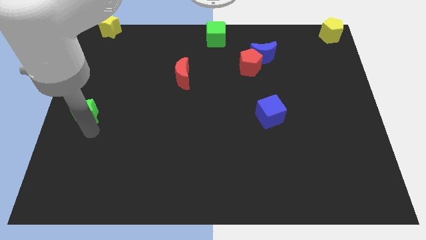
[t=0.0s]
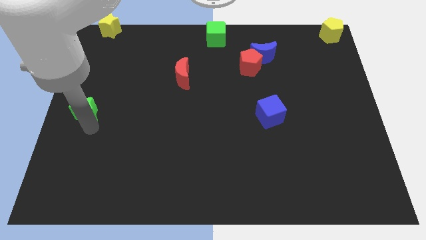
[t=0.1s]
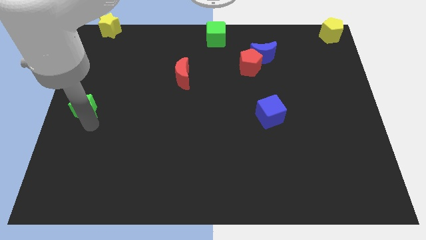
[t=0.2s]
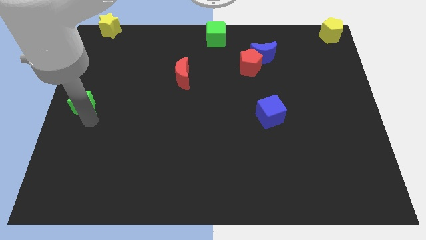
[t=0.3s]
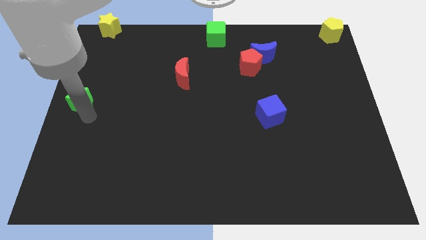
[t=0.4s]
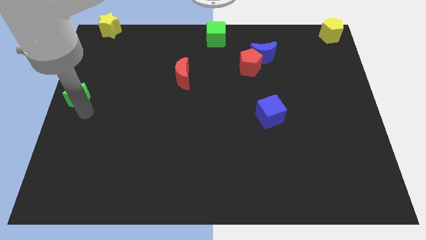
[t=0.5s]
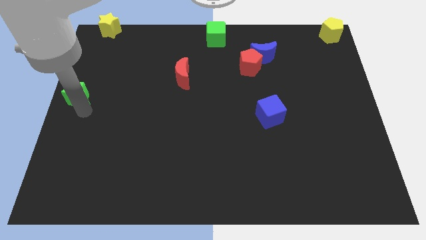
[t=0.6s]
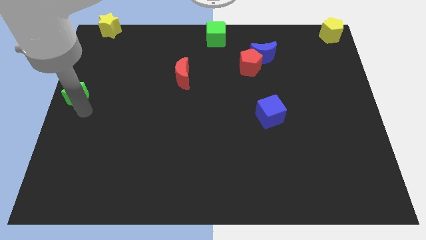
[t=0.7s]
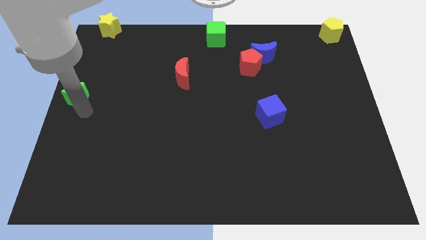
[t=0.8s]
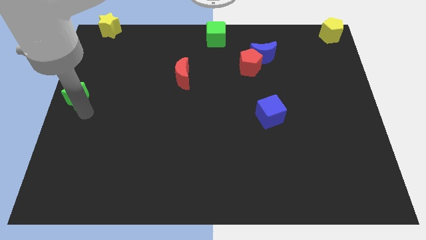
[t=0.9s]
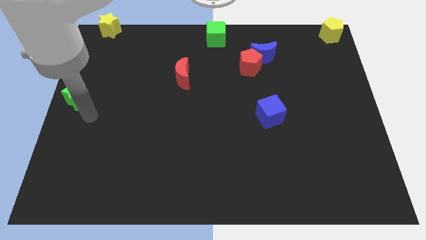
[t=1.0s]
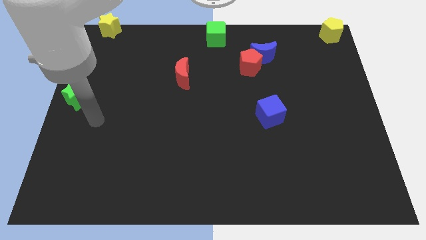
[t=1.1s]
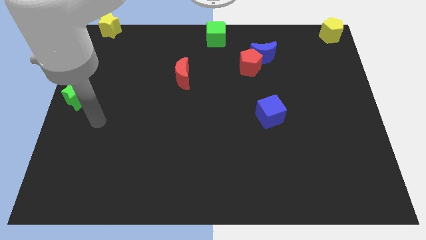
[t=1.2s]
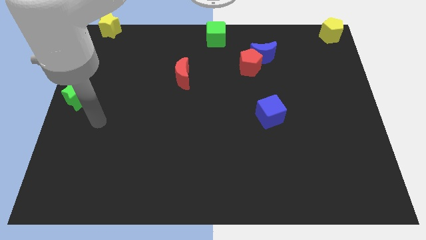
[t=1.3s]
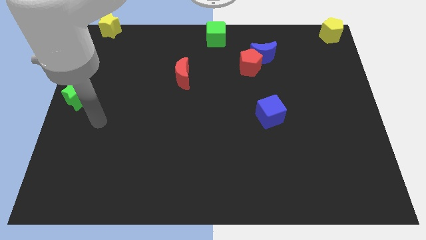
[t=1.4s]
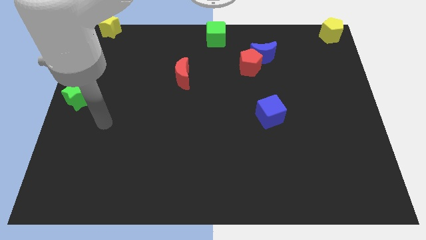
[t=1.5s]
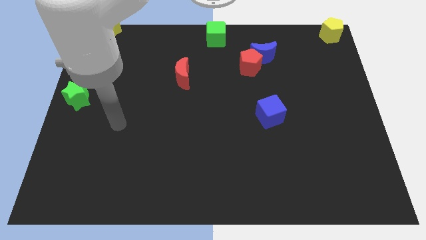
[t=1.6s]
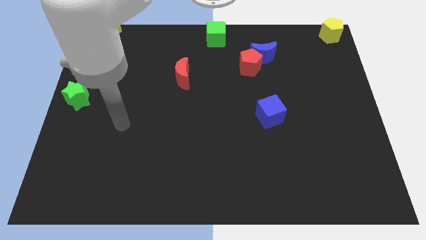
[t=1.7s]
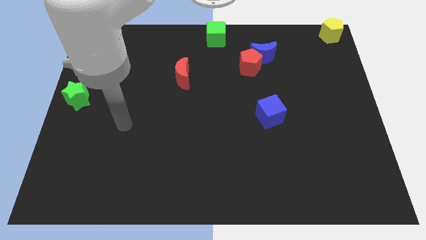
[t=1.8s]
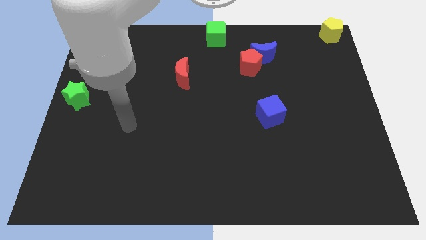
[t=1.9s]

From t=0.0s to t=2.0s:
push the green star towards the center left of the board

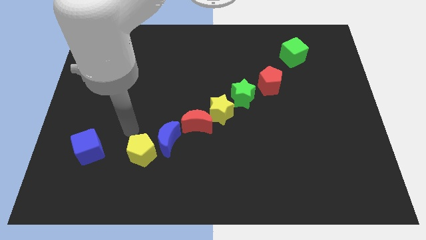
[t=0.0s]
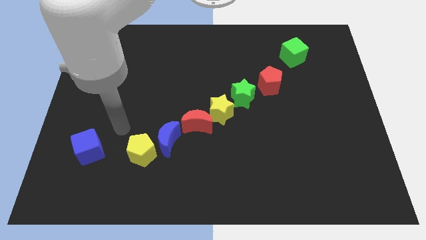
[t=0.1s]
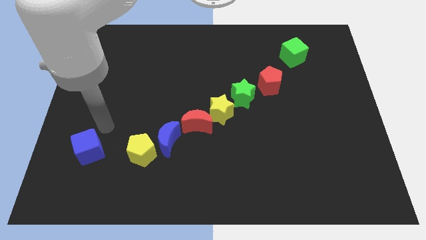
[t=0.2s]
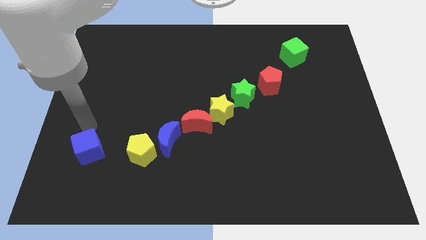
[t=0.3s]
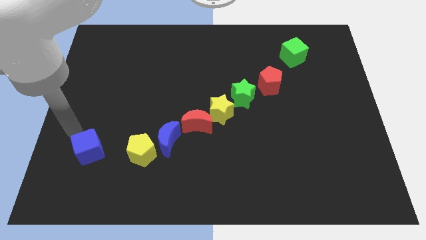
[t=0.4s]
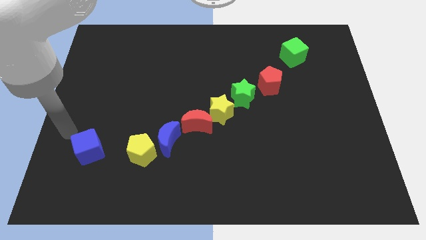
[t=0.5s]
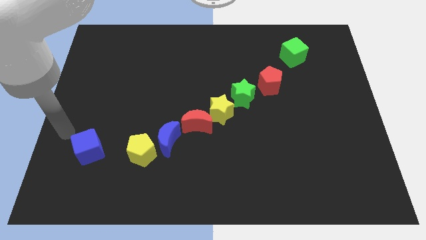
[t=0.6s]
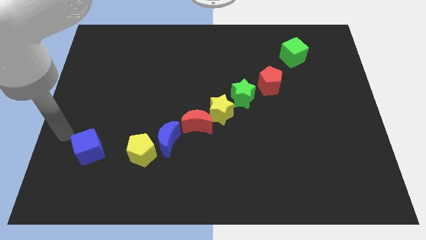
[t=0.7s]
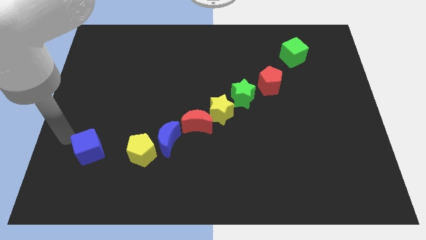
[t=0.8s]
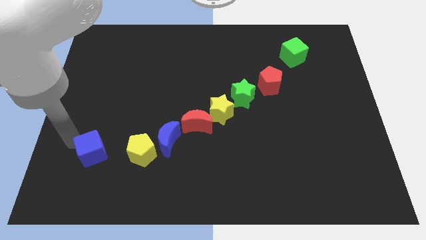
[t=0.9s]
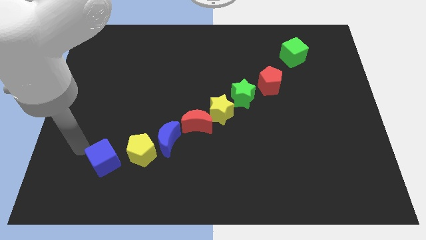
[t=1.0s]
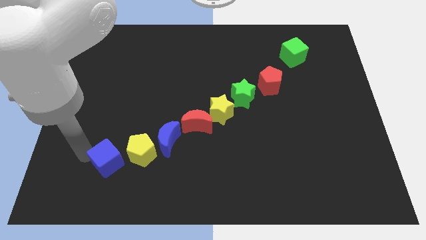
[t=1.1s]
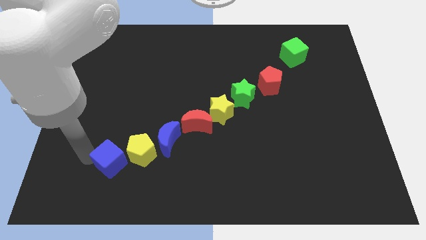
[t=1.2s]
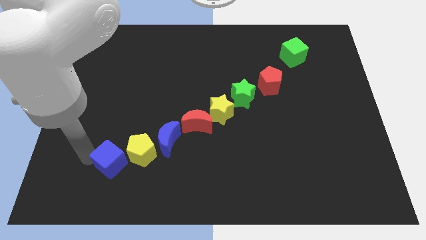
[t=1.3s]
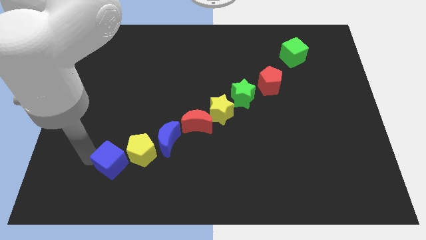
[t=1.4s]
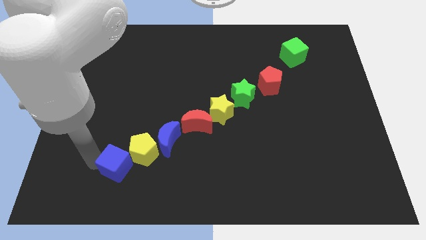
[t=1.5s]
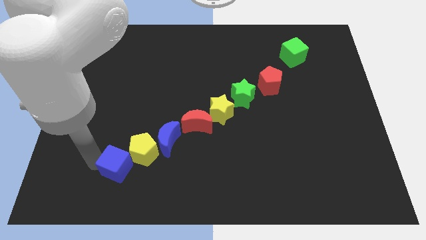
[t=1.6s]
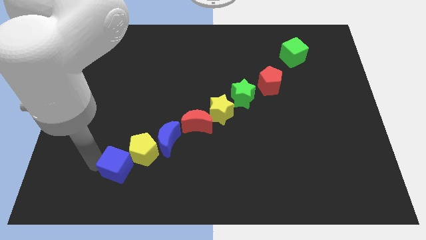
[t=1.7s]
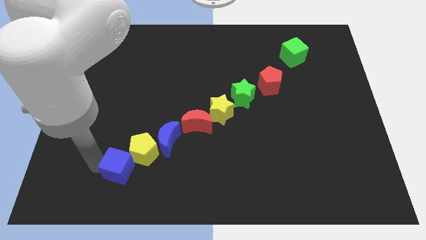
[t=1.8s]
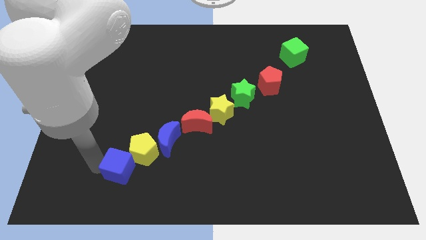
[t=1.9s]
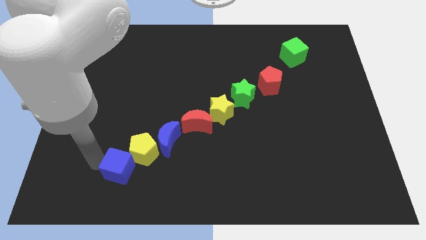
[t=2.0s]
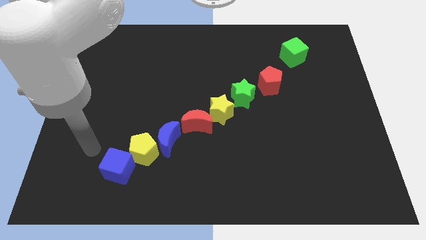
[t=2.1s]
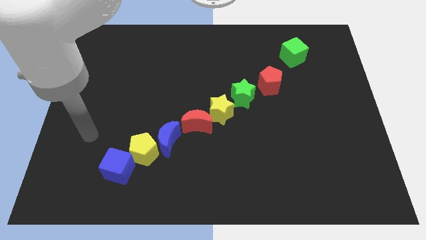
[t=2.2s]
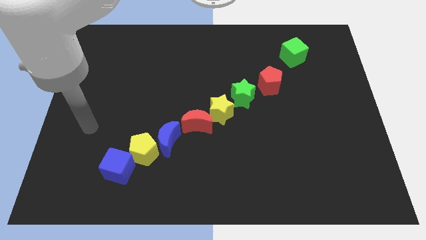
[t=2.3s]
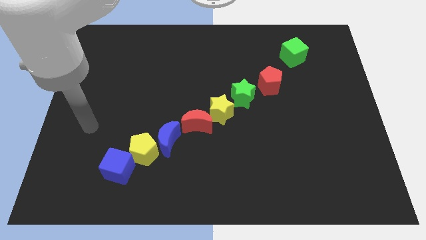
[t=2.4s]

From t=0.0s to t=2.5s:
put the blue cube and the yellow pentagon together

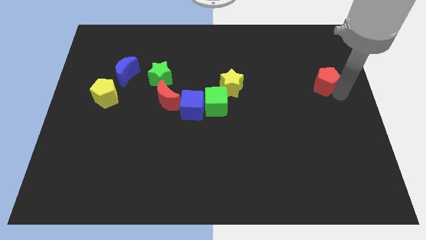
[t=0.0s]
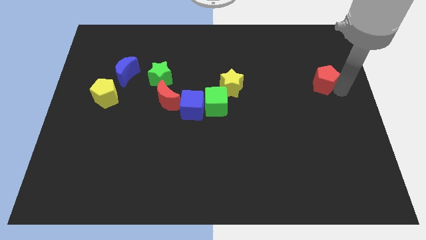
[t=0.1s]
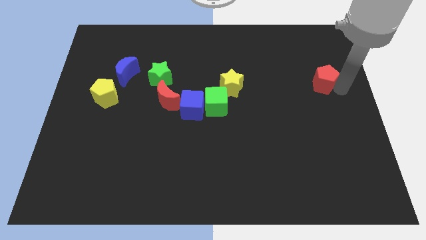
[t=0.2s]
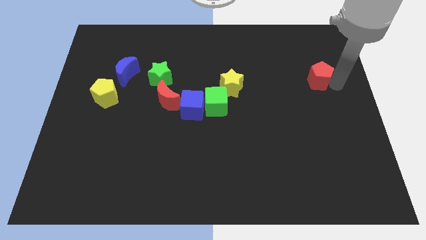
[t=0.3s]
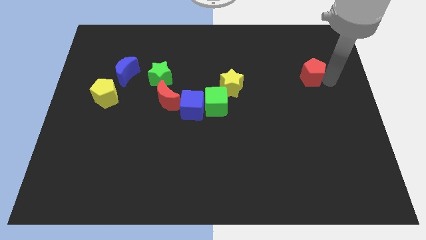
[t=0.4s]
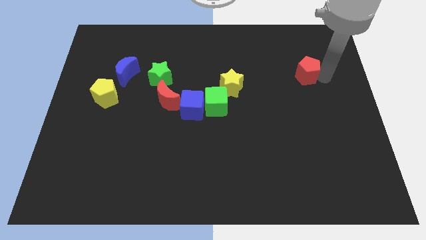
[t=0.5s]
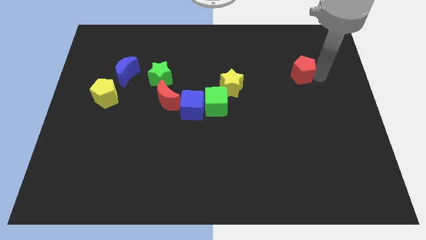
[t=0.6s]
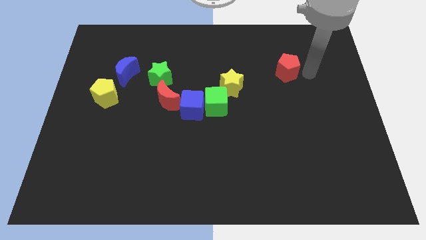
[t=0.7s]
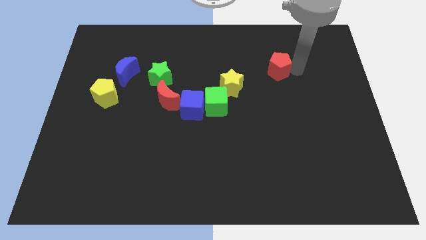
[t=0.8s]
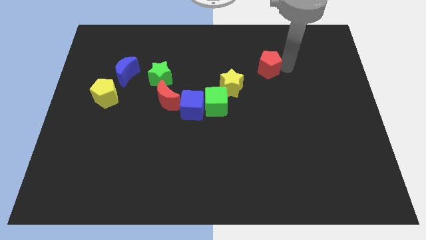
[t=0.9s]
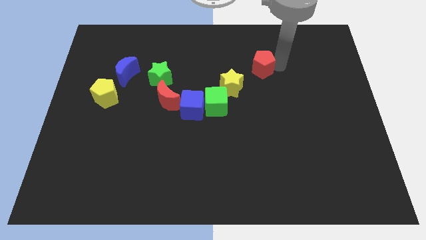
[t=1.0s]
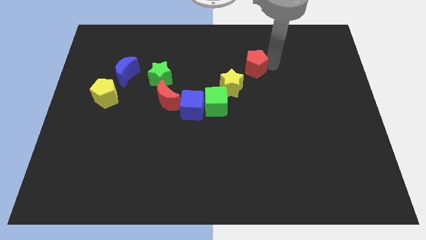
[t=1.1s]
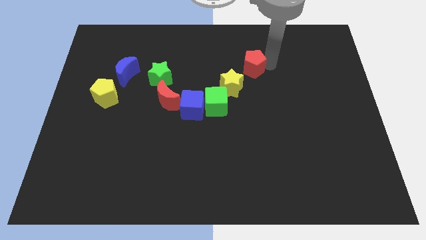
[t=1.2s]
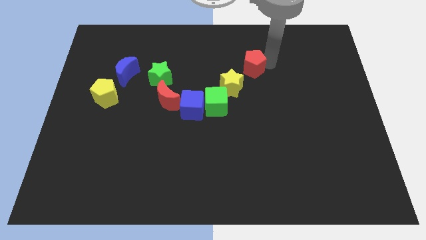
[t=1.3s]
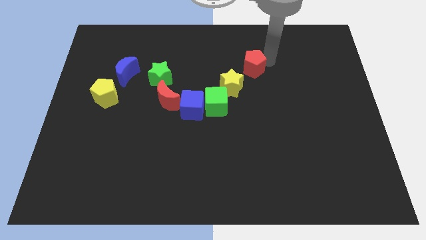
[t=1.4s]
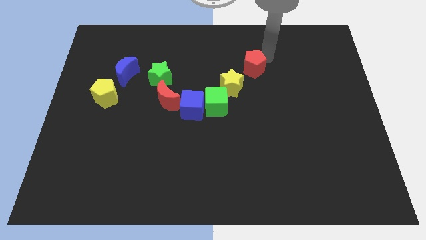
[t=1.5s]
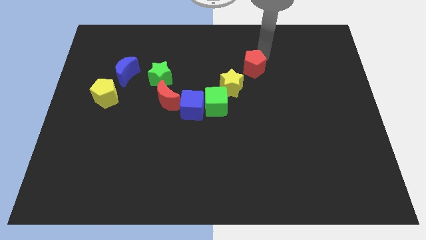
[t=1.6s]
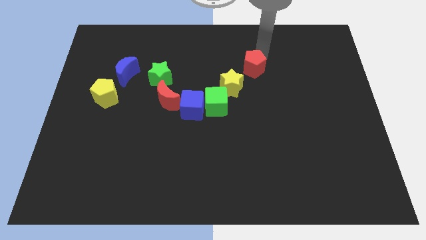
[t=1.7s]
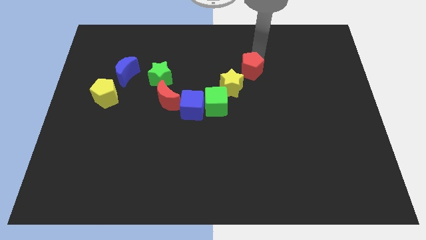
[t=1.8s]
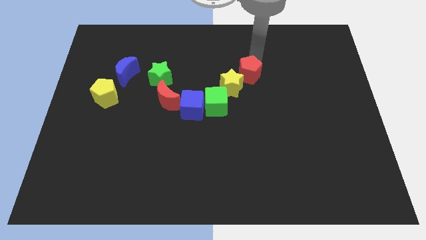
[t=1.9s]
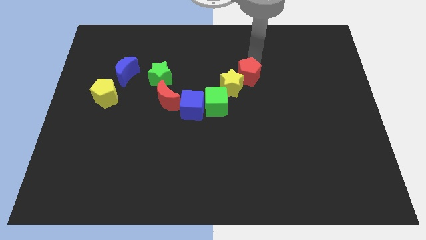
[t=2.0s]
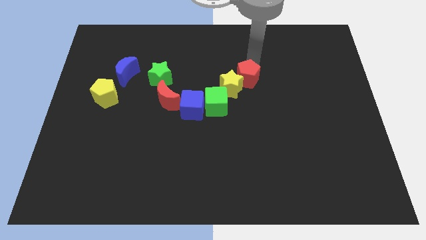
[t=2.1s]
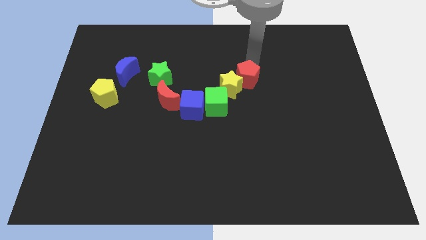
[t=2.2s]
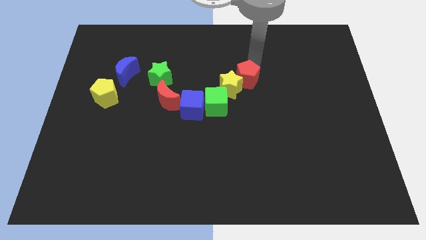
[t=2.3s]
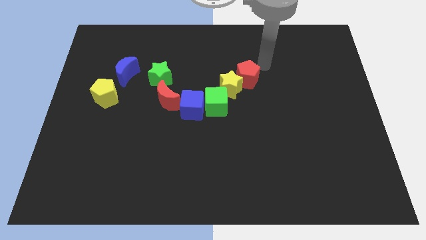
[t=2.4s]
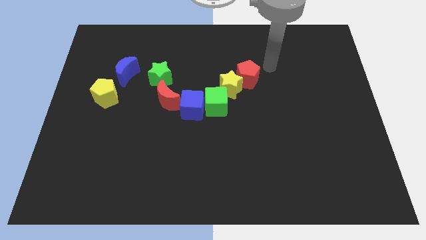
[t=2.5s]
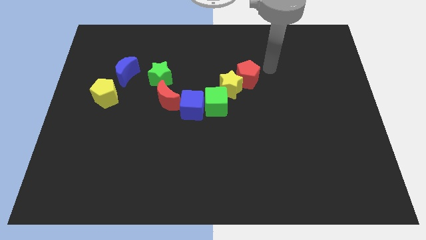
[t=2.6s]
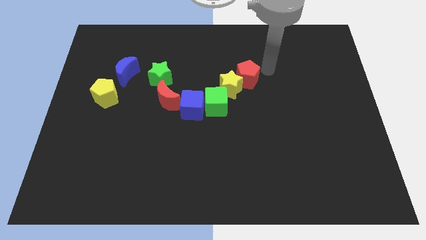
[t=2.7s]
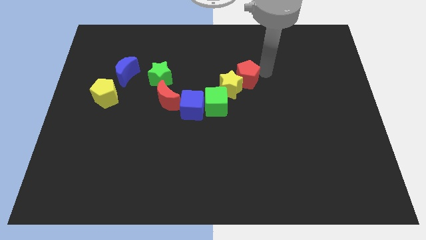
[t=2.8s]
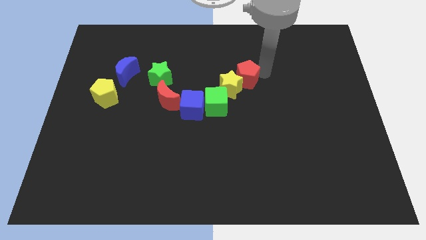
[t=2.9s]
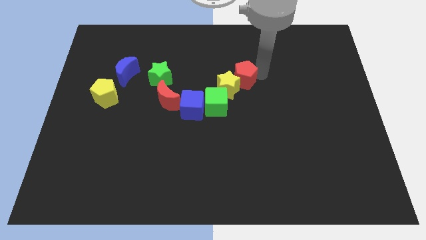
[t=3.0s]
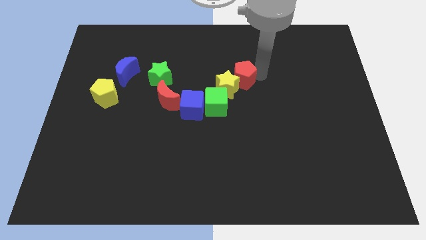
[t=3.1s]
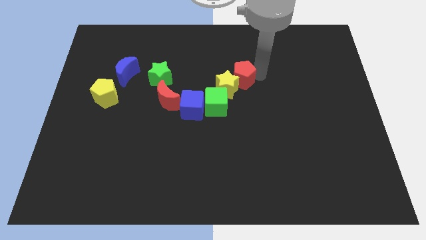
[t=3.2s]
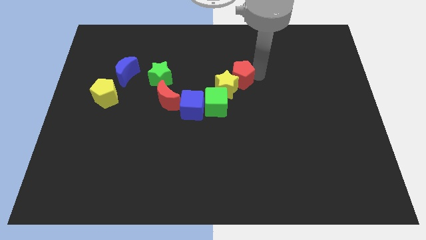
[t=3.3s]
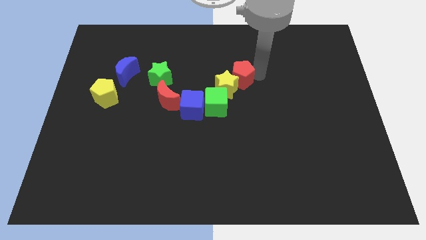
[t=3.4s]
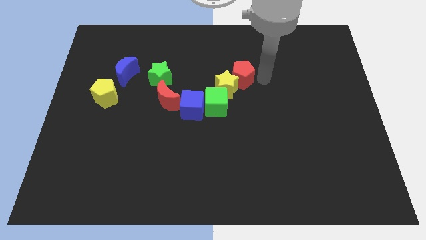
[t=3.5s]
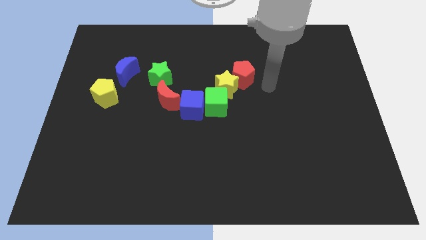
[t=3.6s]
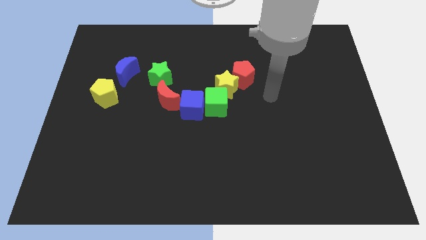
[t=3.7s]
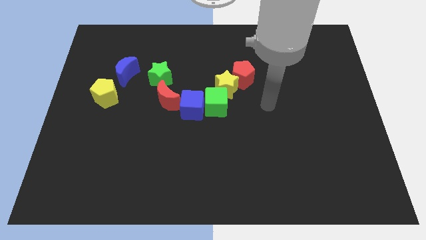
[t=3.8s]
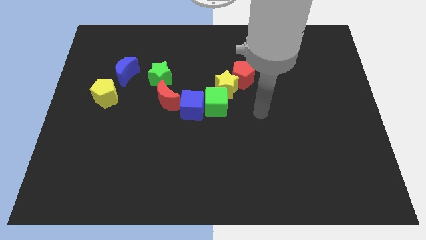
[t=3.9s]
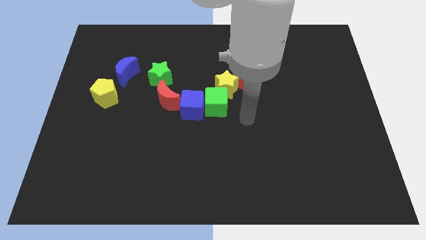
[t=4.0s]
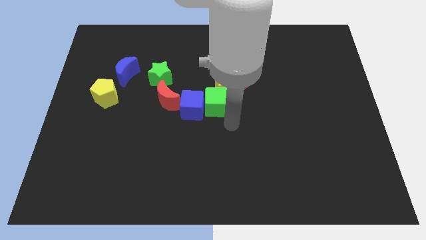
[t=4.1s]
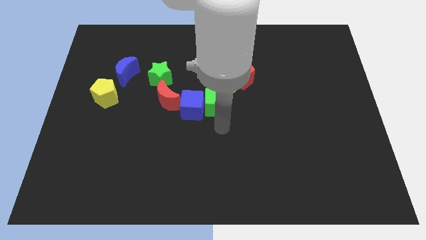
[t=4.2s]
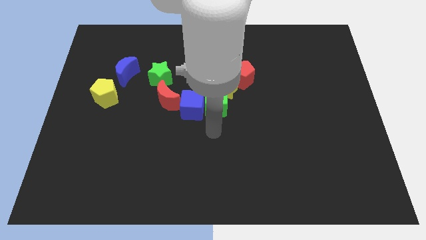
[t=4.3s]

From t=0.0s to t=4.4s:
push the red pentagon slightly into the yellow star
